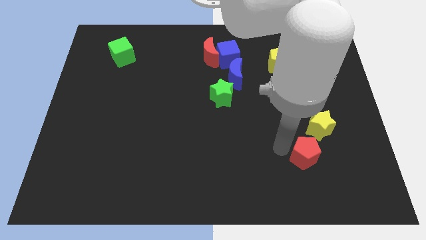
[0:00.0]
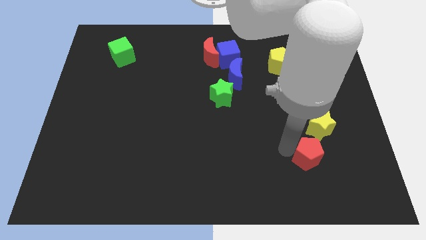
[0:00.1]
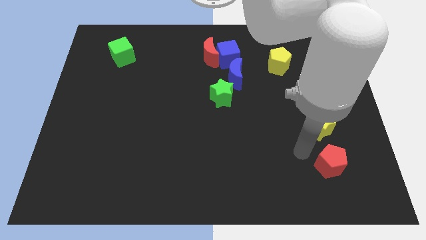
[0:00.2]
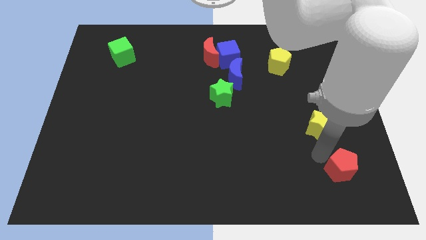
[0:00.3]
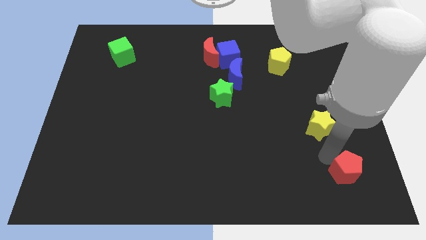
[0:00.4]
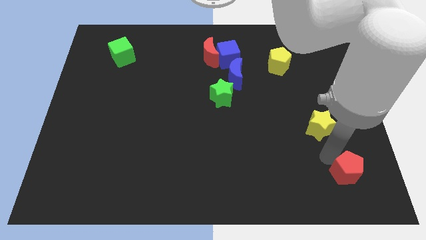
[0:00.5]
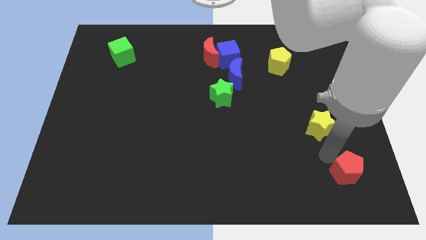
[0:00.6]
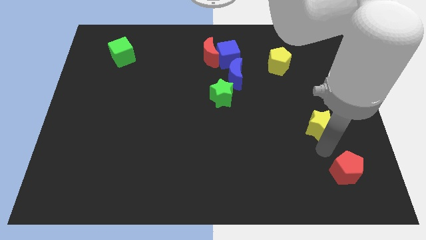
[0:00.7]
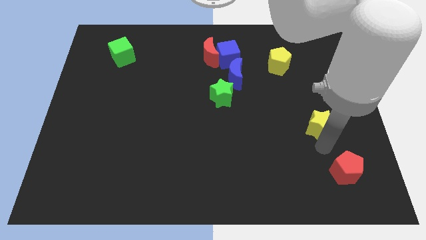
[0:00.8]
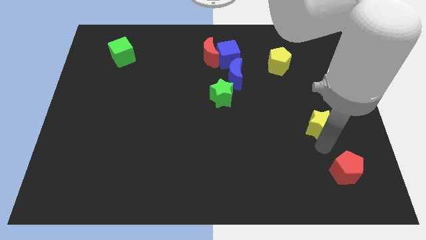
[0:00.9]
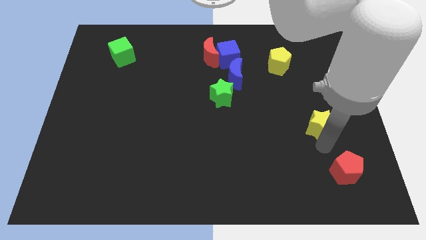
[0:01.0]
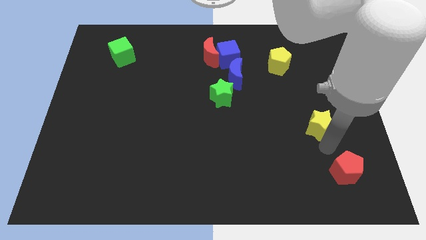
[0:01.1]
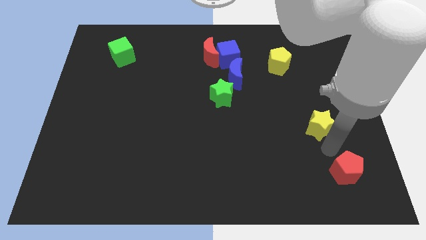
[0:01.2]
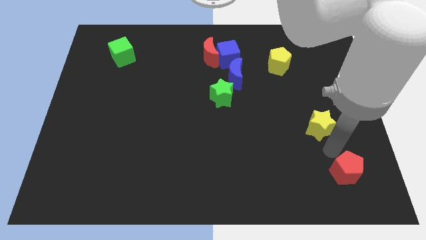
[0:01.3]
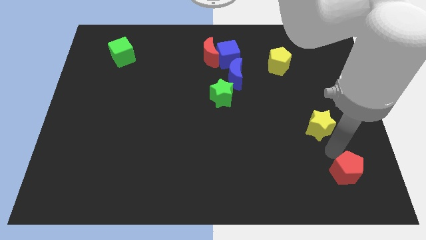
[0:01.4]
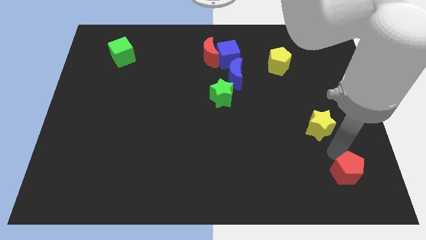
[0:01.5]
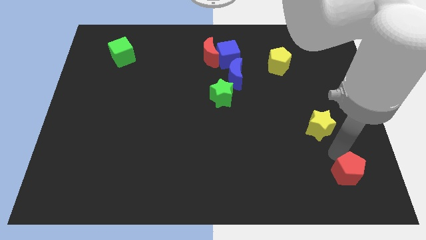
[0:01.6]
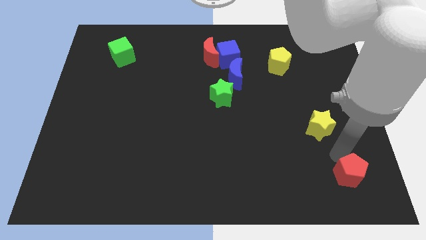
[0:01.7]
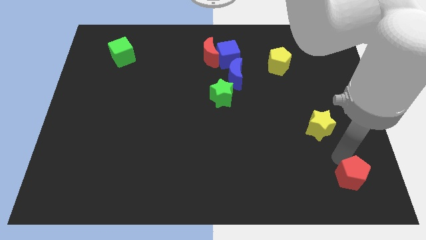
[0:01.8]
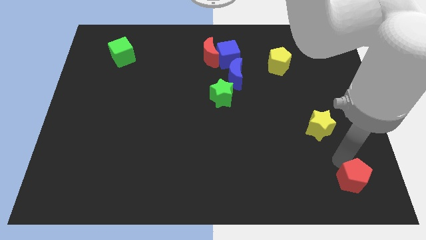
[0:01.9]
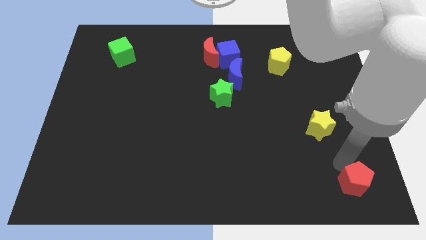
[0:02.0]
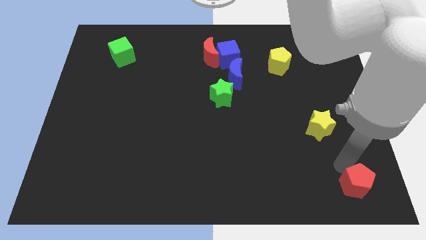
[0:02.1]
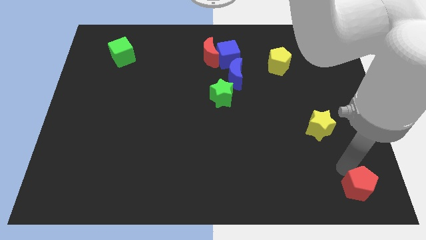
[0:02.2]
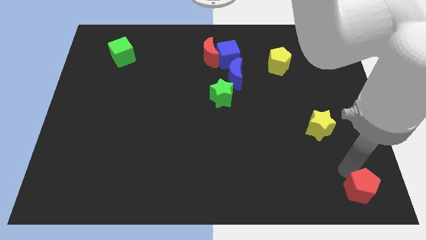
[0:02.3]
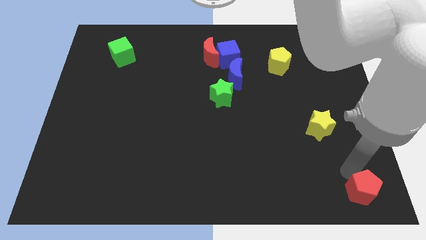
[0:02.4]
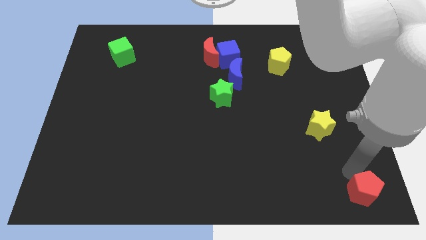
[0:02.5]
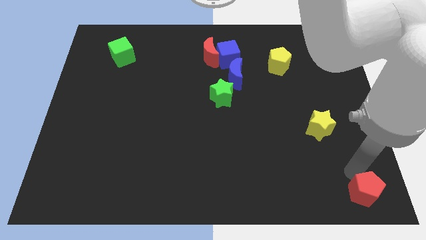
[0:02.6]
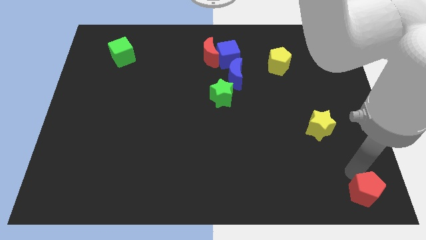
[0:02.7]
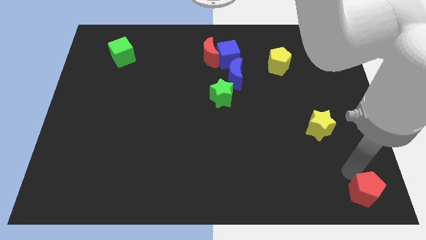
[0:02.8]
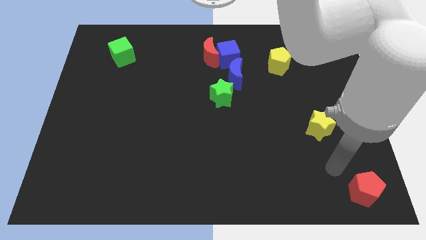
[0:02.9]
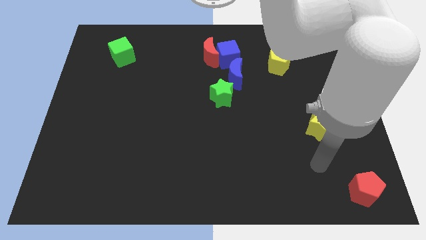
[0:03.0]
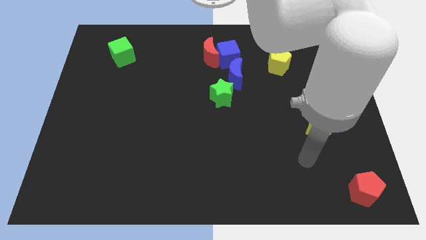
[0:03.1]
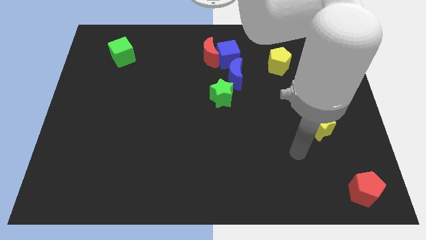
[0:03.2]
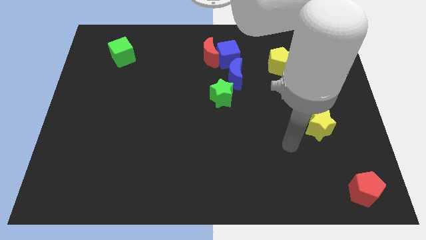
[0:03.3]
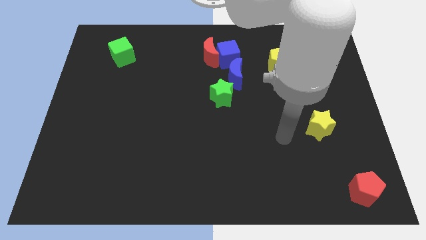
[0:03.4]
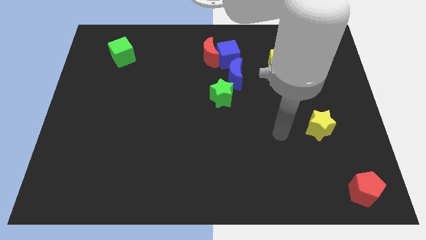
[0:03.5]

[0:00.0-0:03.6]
move the red pentagon towards the bottom right

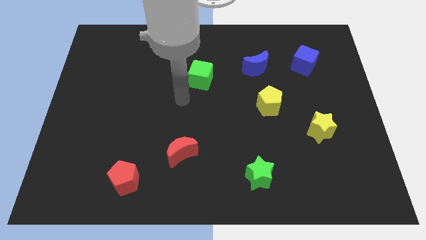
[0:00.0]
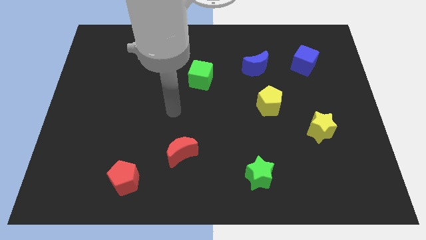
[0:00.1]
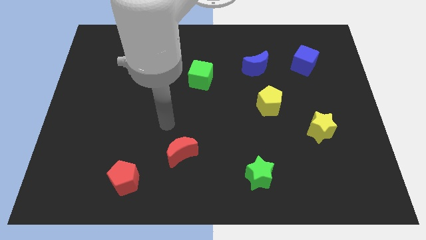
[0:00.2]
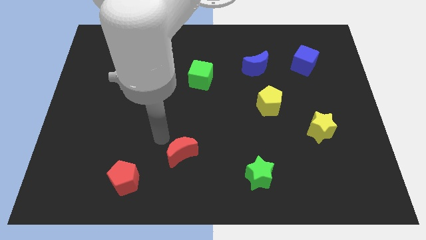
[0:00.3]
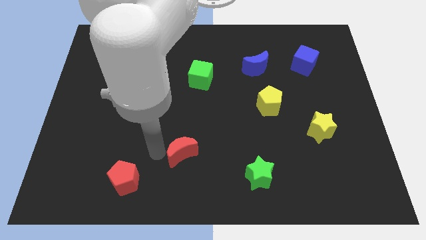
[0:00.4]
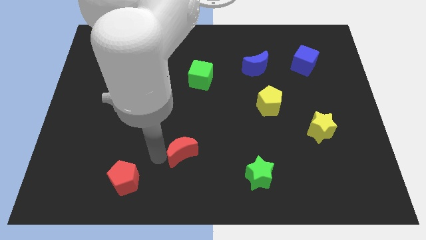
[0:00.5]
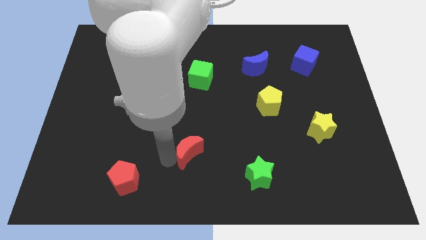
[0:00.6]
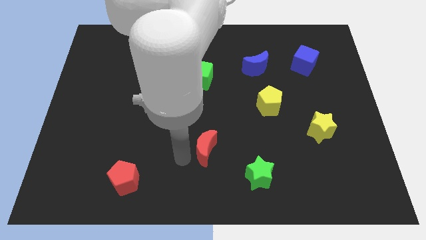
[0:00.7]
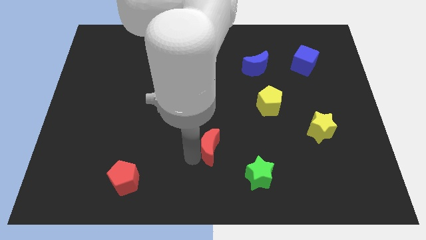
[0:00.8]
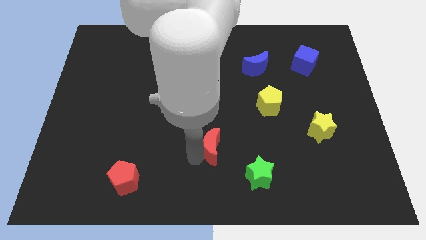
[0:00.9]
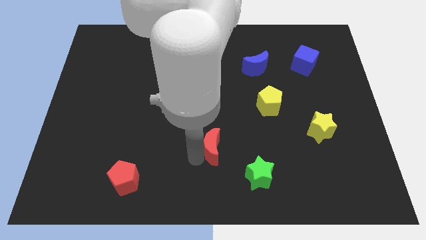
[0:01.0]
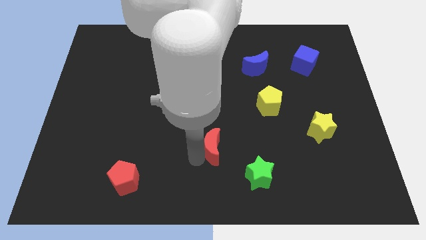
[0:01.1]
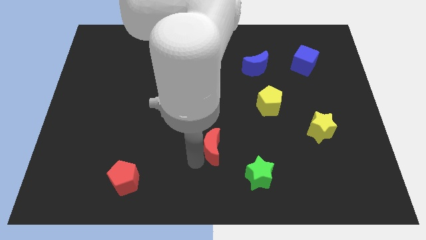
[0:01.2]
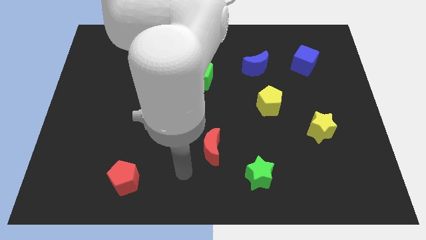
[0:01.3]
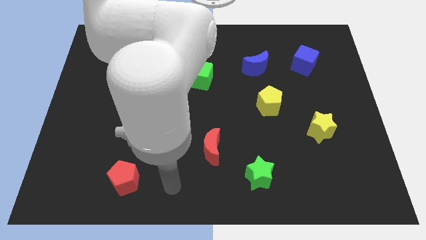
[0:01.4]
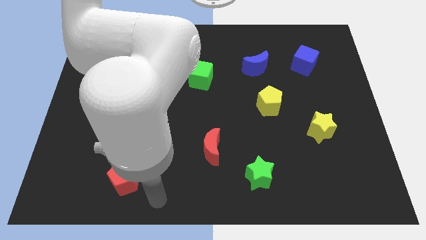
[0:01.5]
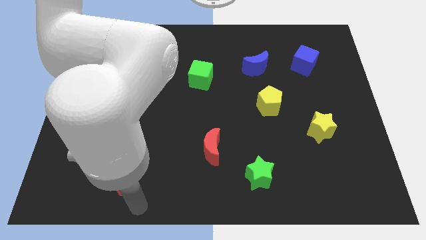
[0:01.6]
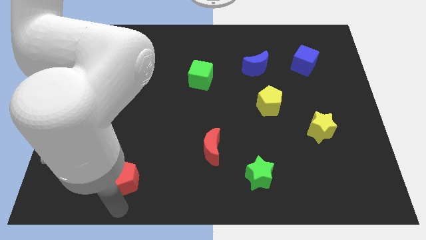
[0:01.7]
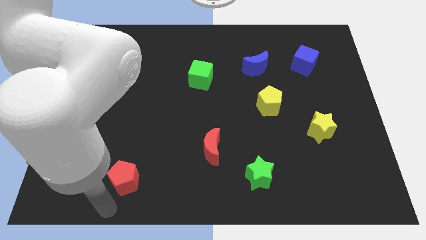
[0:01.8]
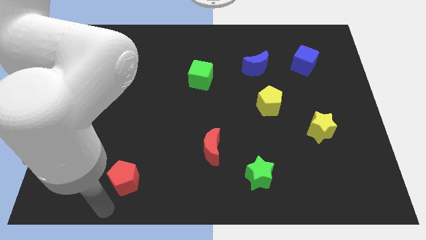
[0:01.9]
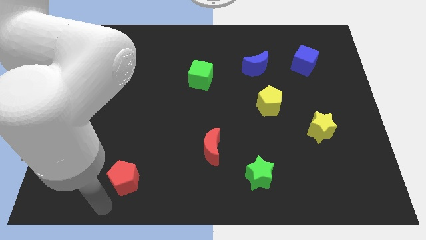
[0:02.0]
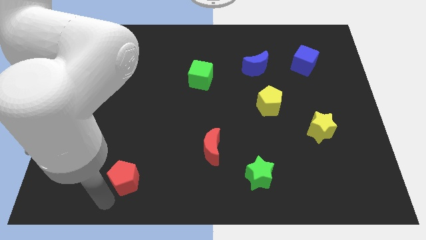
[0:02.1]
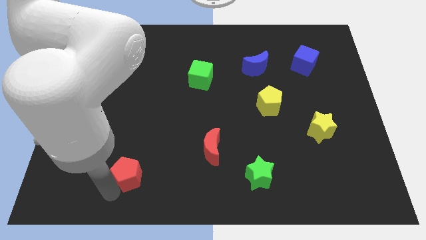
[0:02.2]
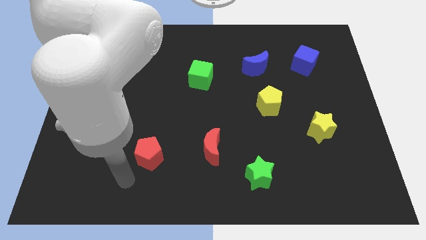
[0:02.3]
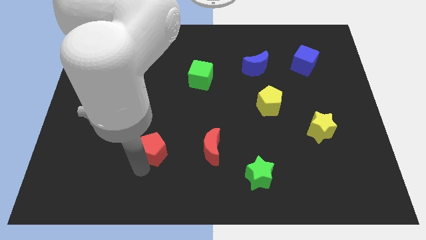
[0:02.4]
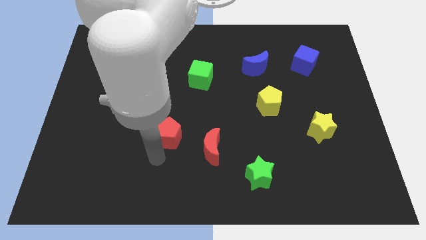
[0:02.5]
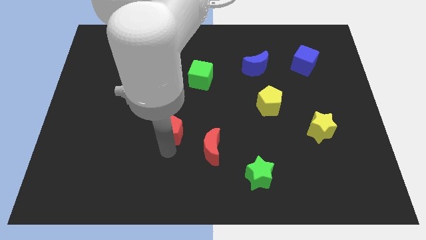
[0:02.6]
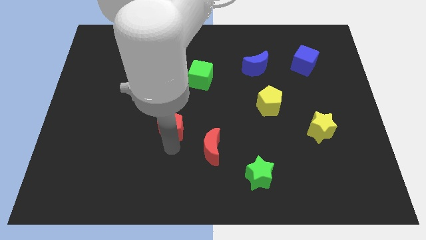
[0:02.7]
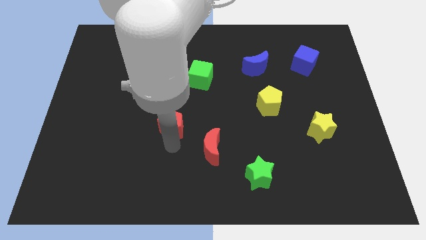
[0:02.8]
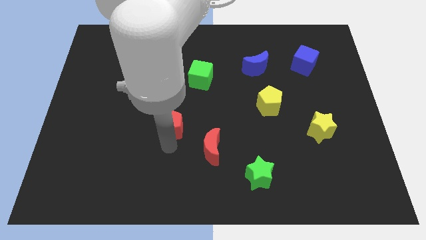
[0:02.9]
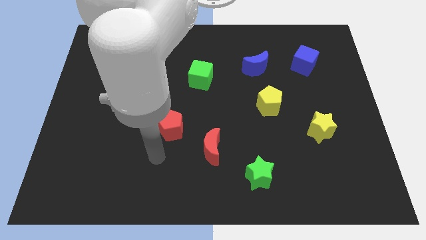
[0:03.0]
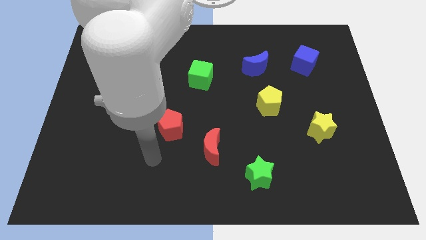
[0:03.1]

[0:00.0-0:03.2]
place both the red blocks diagonally on the top left side of the green star

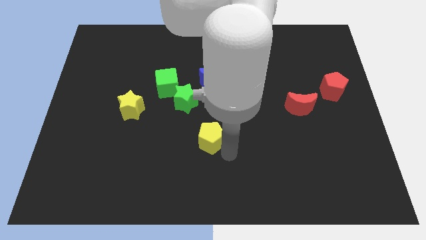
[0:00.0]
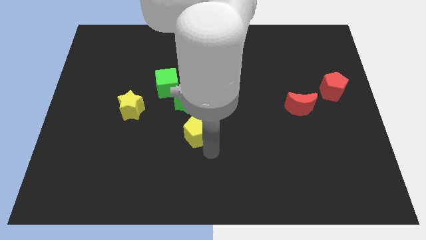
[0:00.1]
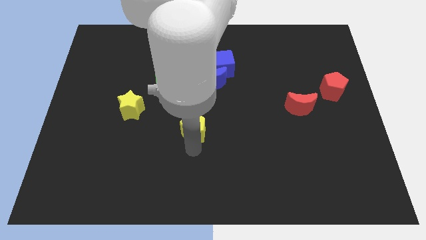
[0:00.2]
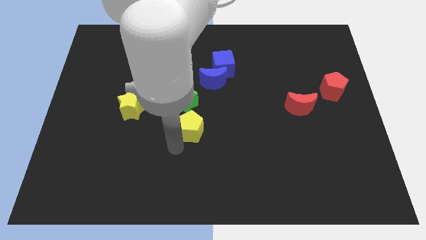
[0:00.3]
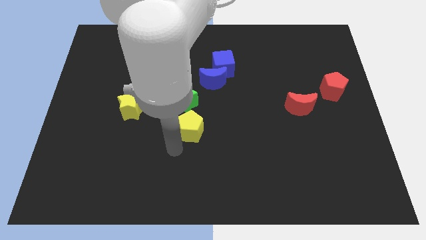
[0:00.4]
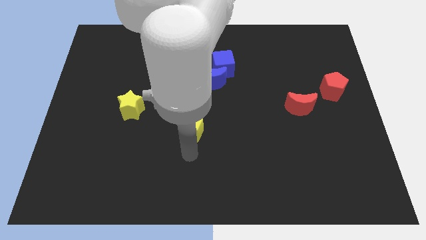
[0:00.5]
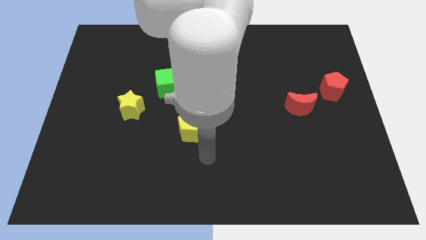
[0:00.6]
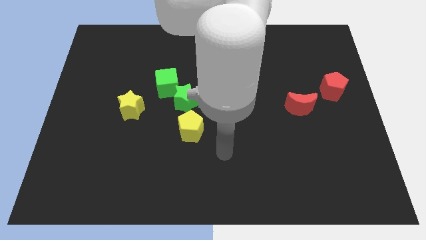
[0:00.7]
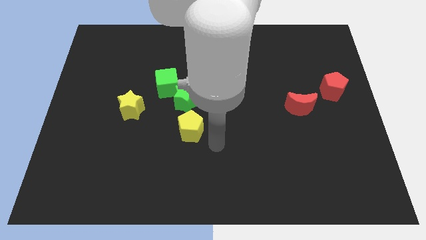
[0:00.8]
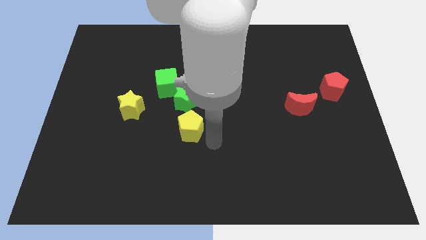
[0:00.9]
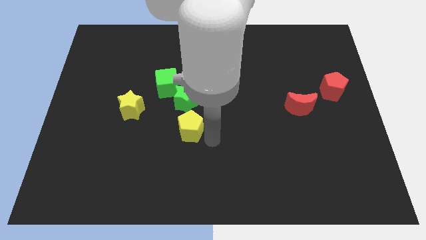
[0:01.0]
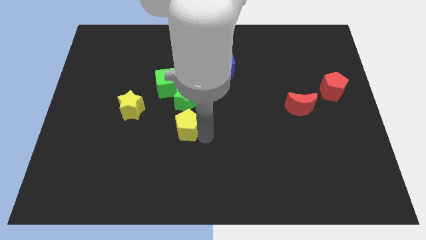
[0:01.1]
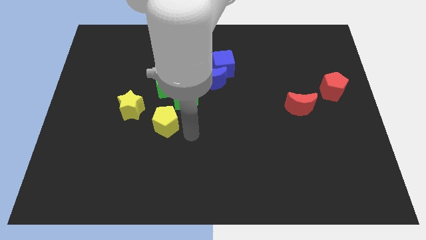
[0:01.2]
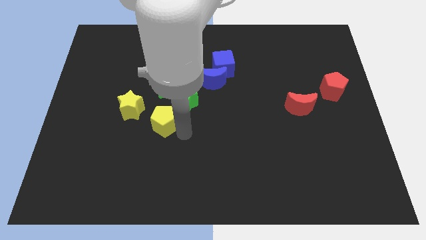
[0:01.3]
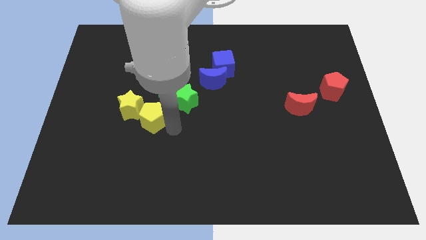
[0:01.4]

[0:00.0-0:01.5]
slide the yellow pentagon towards the left to green star

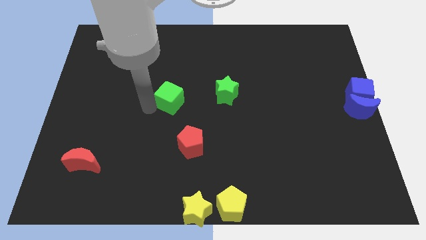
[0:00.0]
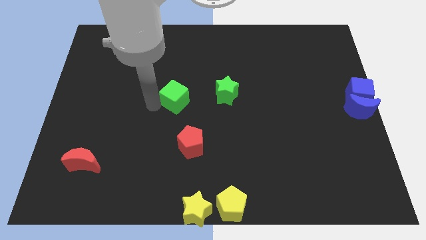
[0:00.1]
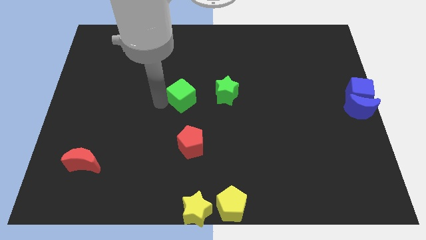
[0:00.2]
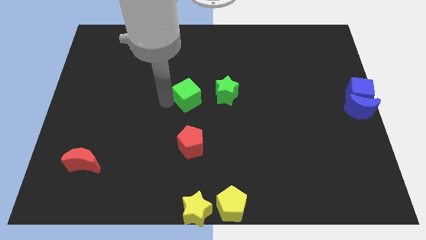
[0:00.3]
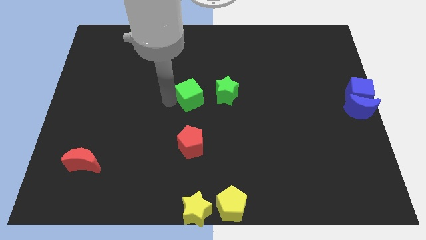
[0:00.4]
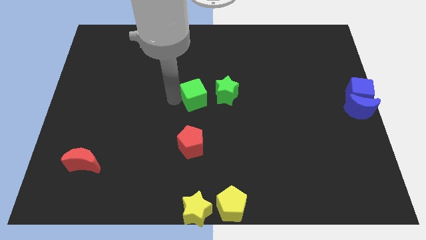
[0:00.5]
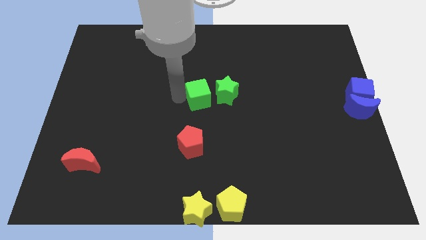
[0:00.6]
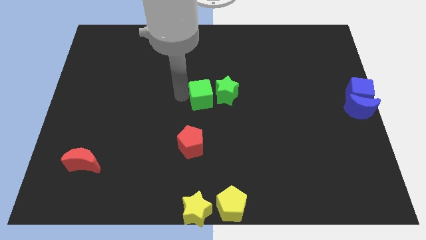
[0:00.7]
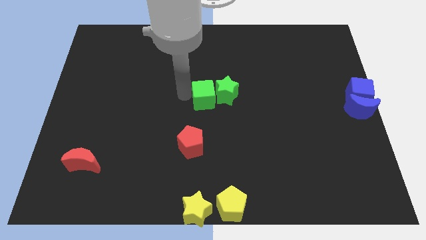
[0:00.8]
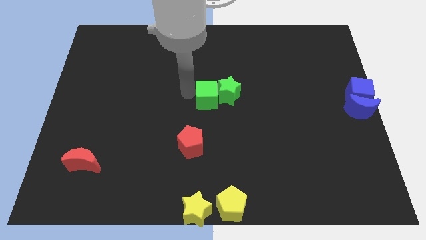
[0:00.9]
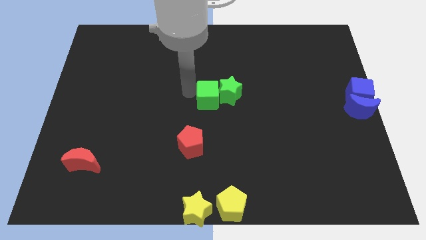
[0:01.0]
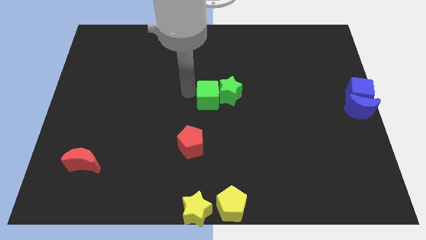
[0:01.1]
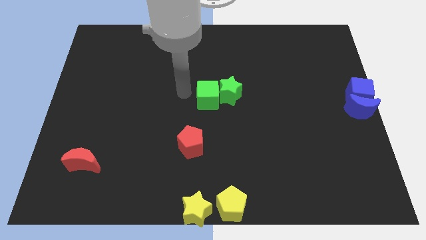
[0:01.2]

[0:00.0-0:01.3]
push the green cube to the left side of the green star on the board
